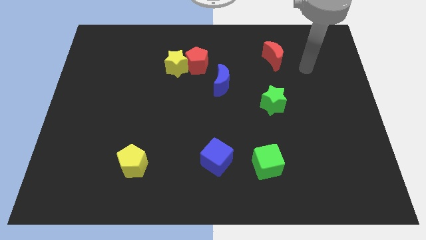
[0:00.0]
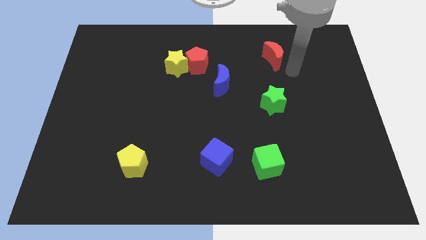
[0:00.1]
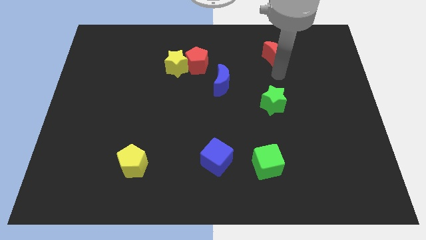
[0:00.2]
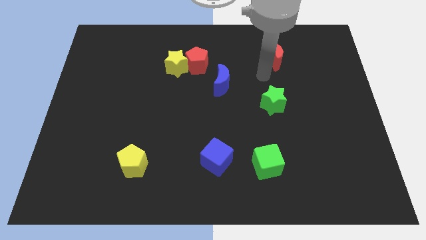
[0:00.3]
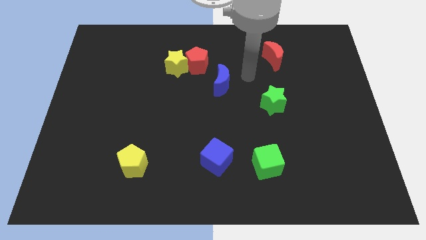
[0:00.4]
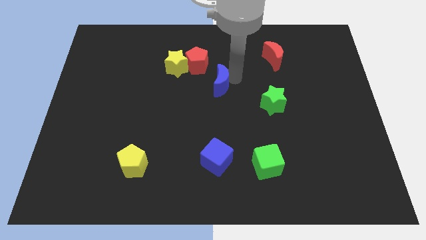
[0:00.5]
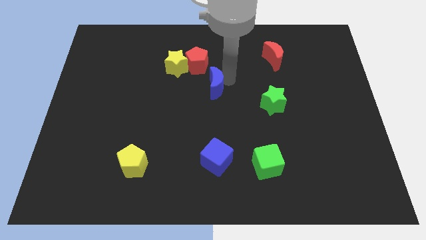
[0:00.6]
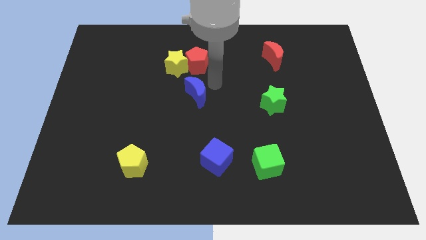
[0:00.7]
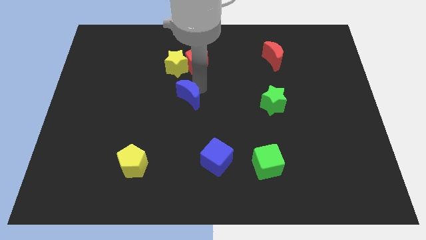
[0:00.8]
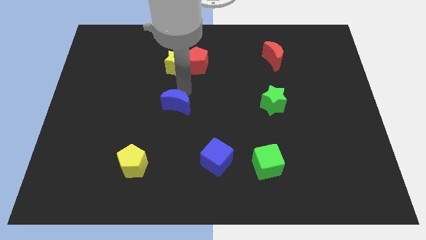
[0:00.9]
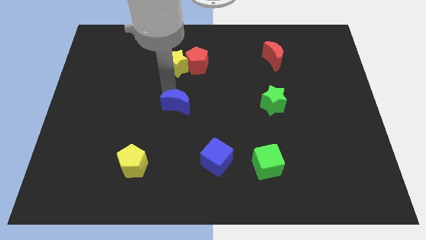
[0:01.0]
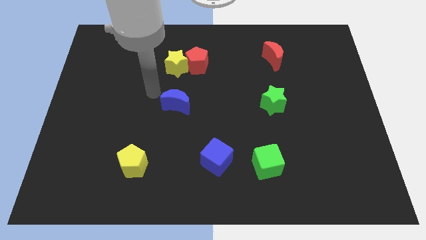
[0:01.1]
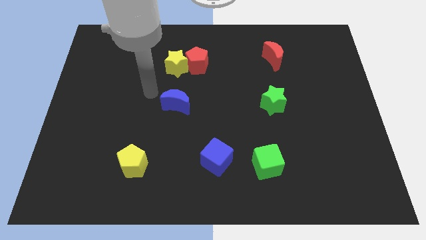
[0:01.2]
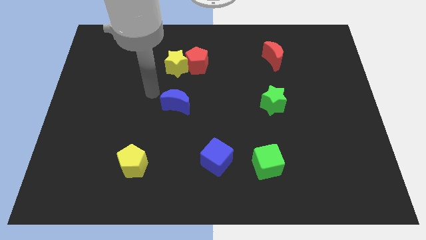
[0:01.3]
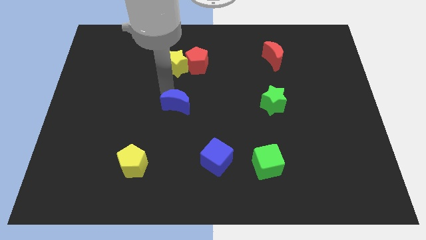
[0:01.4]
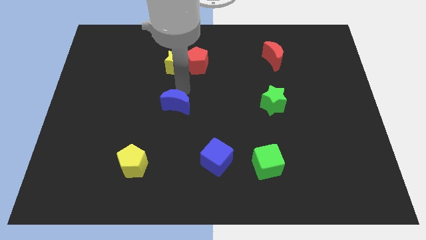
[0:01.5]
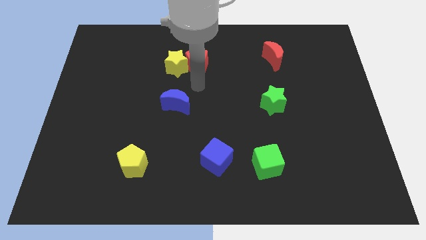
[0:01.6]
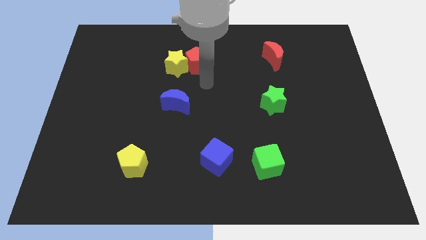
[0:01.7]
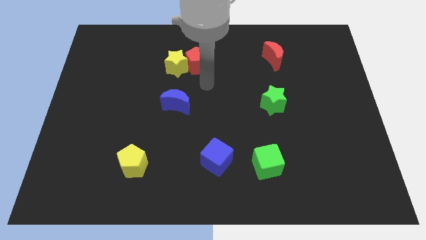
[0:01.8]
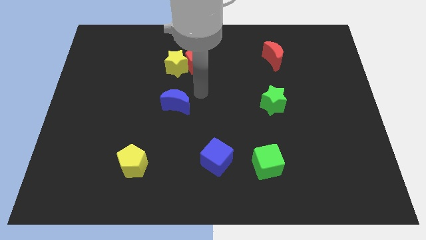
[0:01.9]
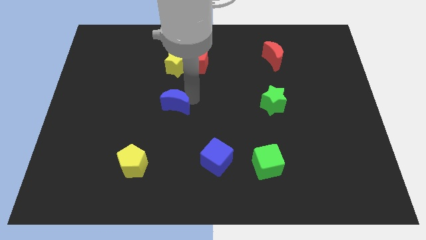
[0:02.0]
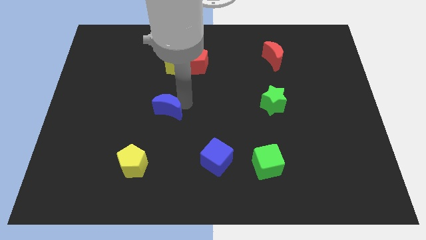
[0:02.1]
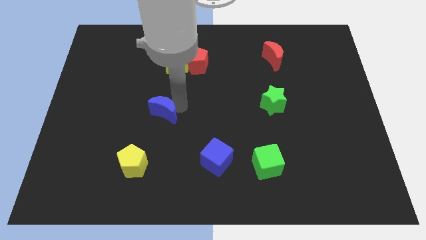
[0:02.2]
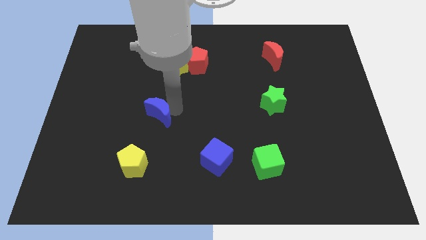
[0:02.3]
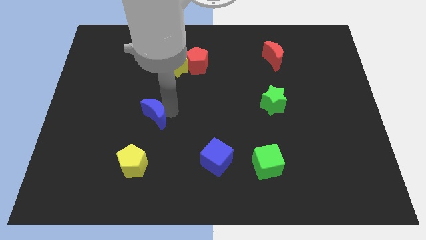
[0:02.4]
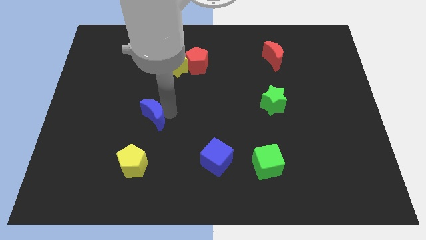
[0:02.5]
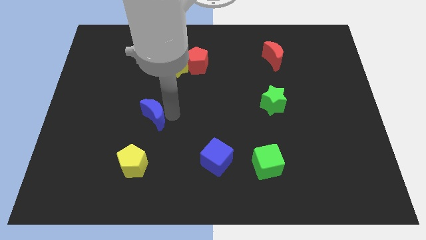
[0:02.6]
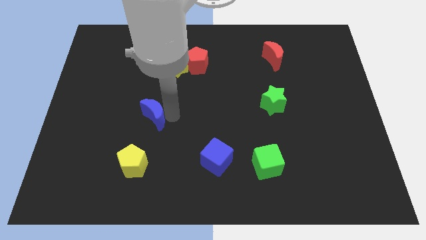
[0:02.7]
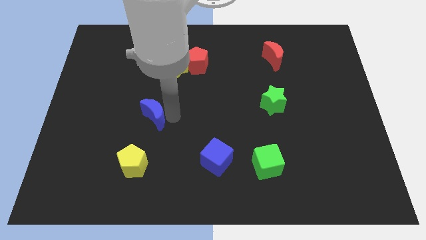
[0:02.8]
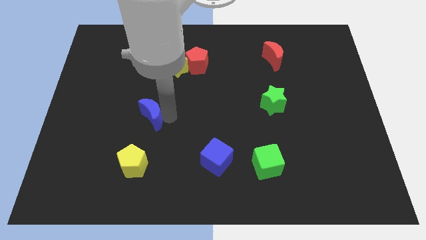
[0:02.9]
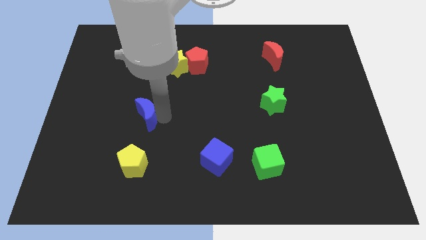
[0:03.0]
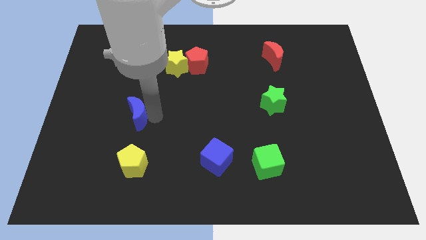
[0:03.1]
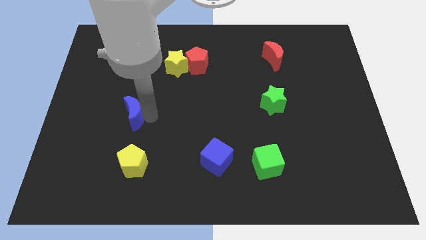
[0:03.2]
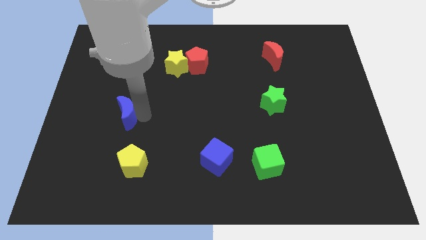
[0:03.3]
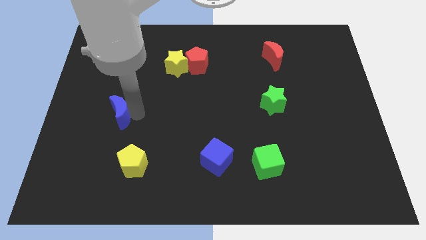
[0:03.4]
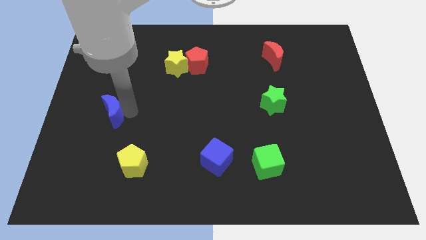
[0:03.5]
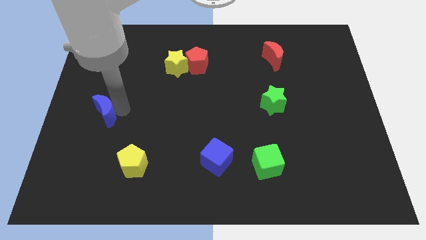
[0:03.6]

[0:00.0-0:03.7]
move the blue crescent diagonally on the top left side of the yellow pentagon

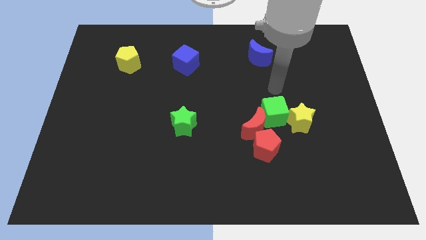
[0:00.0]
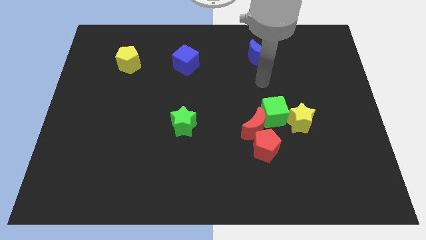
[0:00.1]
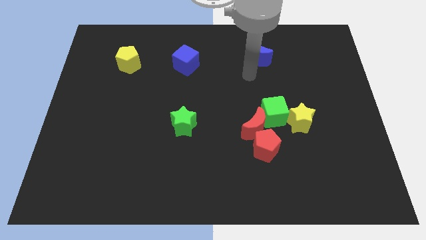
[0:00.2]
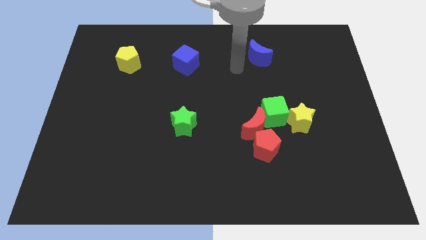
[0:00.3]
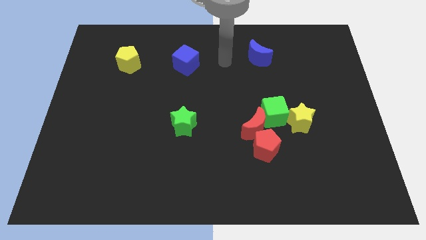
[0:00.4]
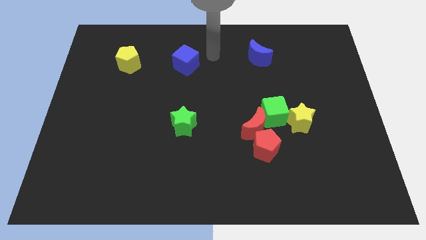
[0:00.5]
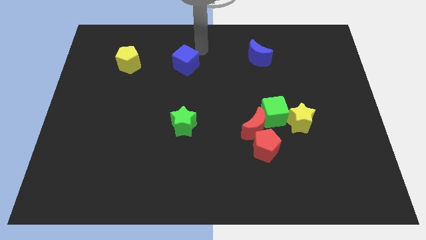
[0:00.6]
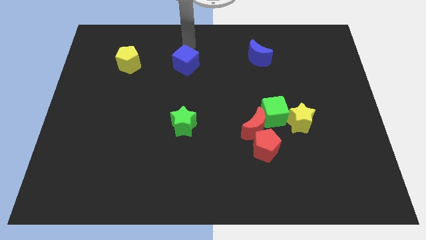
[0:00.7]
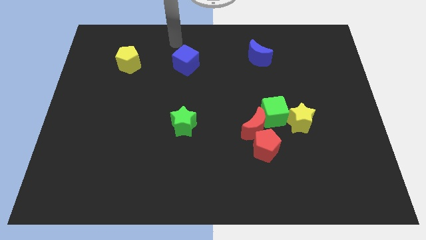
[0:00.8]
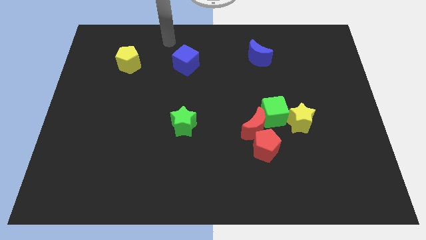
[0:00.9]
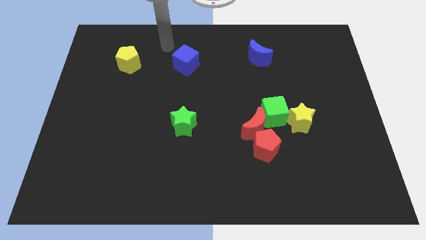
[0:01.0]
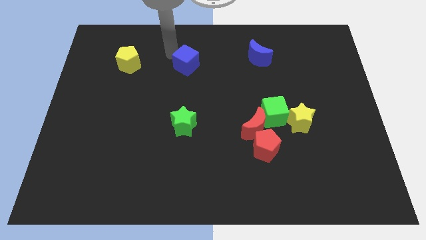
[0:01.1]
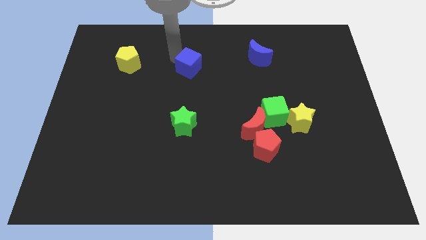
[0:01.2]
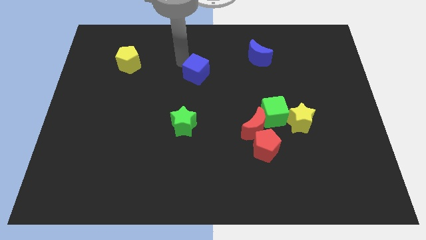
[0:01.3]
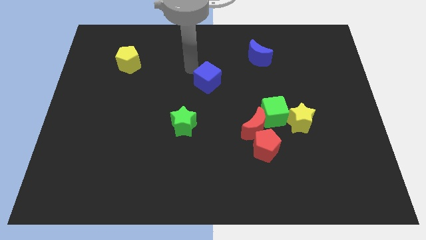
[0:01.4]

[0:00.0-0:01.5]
push the blue cube slightly to the bottom

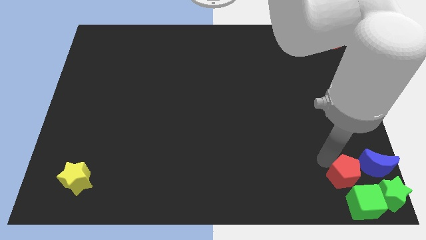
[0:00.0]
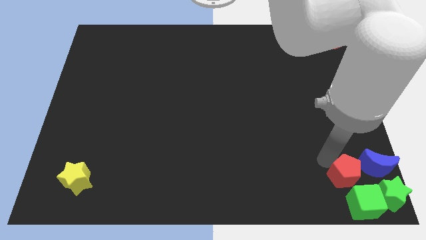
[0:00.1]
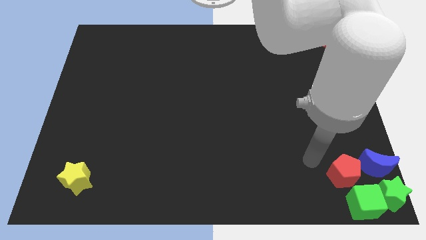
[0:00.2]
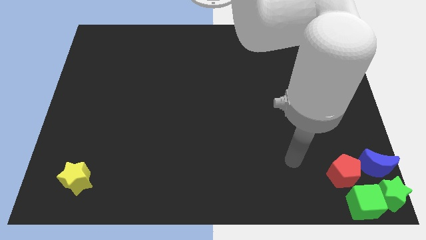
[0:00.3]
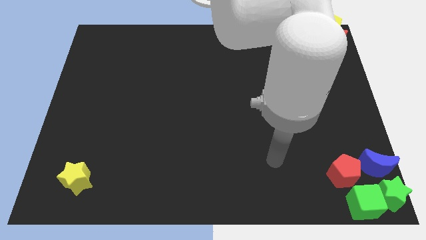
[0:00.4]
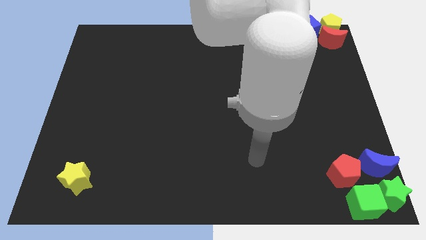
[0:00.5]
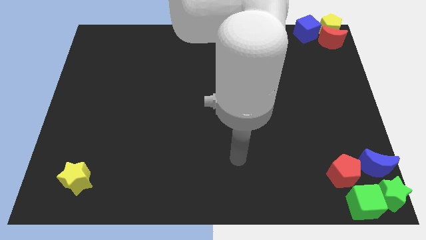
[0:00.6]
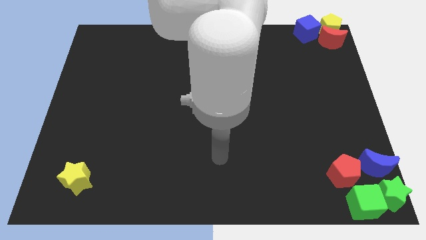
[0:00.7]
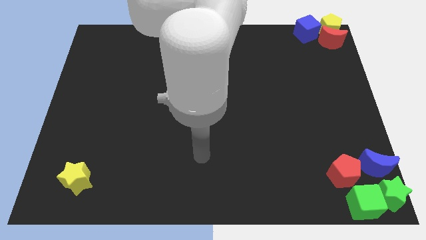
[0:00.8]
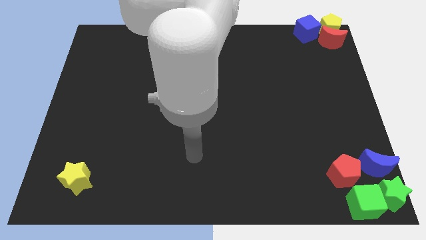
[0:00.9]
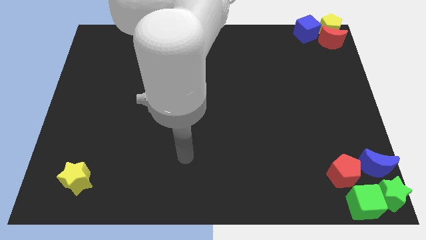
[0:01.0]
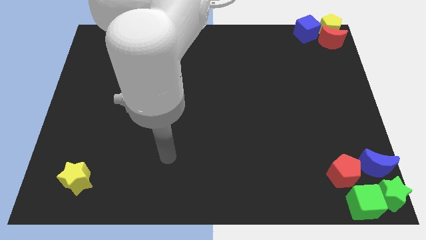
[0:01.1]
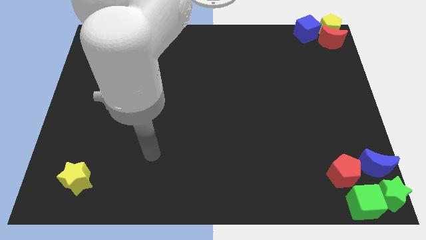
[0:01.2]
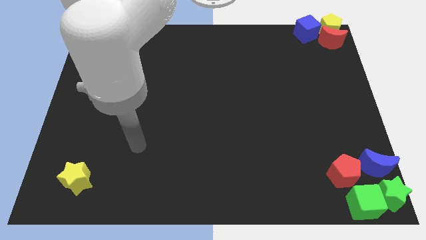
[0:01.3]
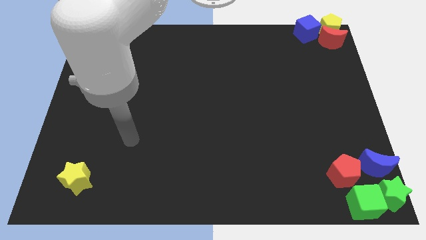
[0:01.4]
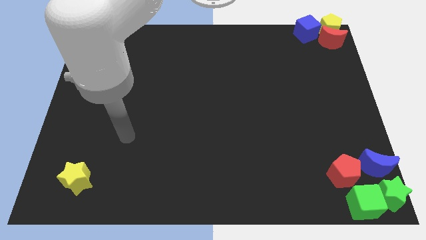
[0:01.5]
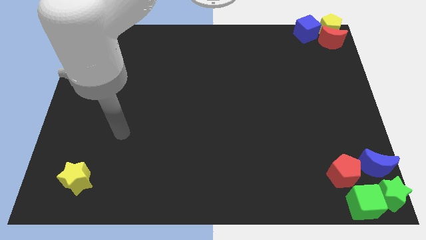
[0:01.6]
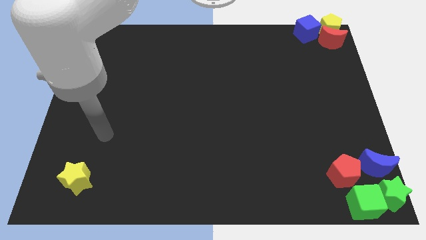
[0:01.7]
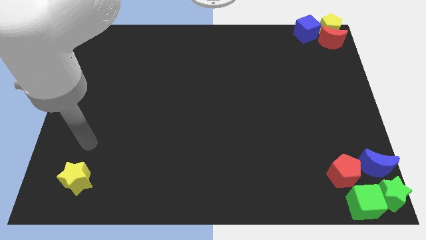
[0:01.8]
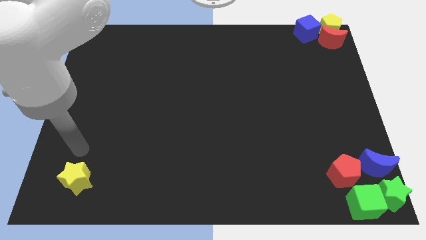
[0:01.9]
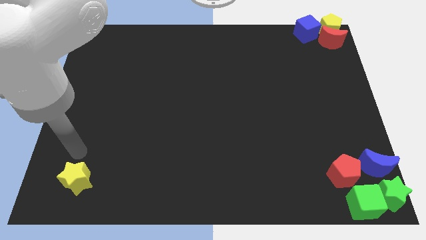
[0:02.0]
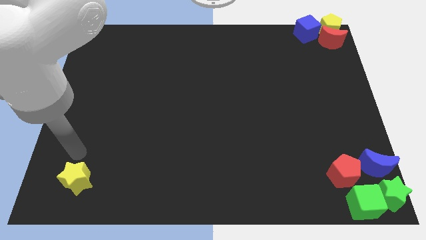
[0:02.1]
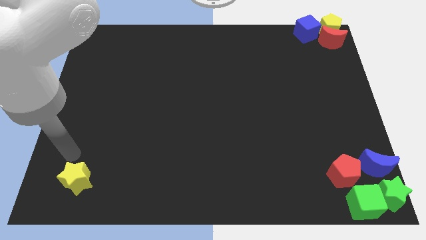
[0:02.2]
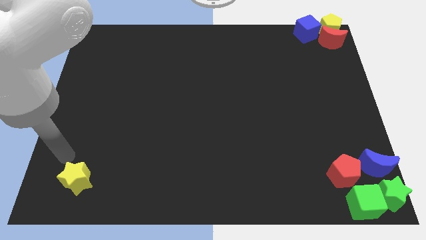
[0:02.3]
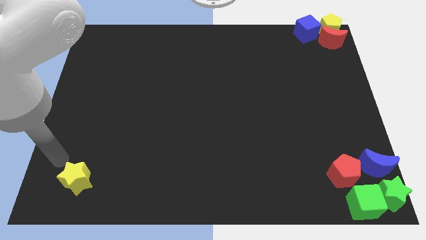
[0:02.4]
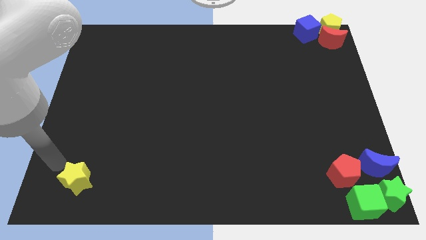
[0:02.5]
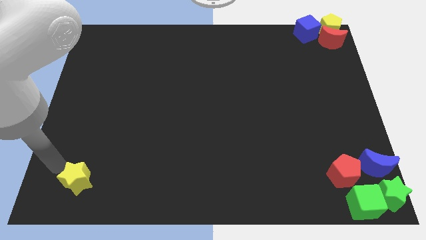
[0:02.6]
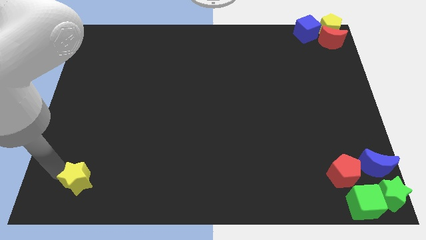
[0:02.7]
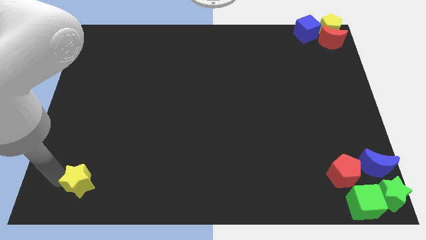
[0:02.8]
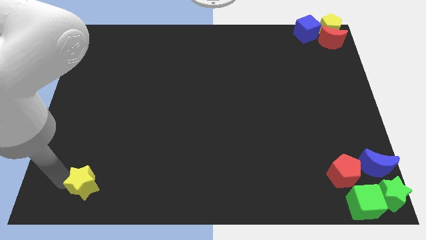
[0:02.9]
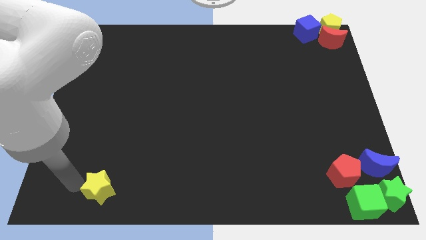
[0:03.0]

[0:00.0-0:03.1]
touch the left side of the yellow star

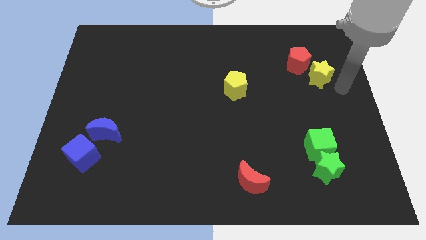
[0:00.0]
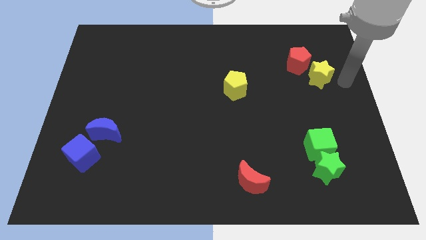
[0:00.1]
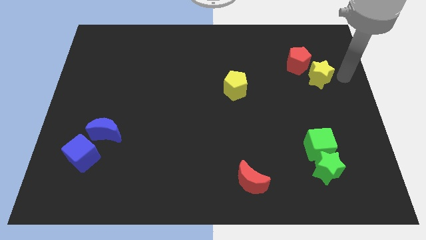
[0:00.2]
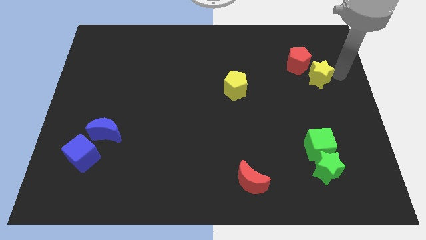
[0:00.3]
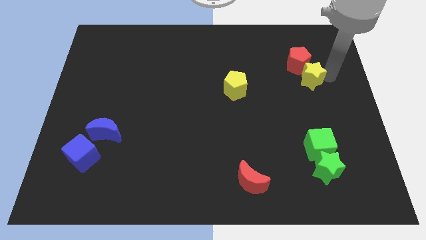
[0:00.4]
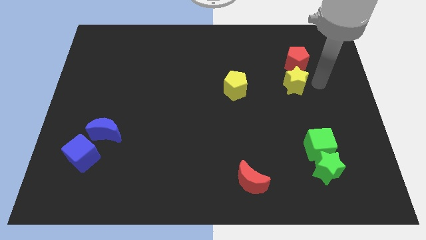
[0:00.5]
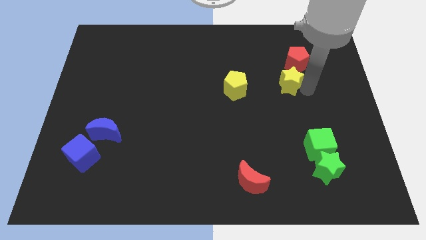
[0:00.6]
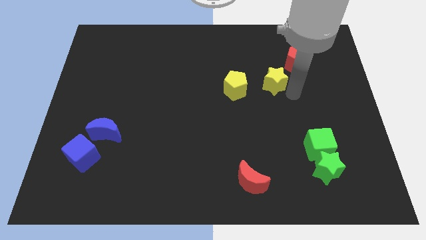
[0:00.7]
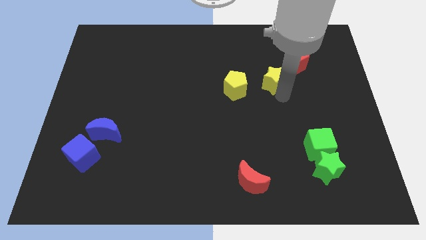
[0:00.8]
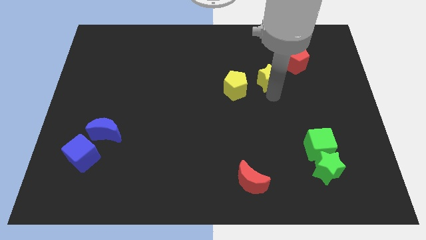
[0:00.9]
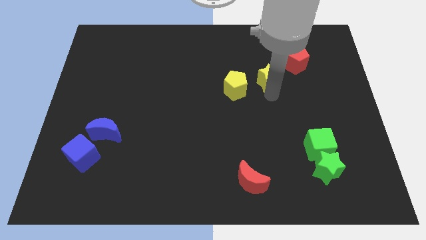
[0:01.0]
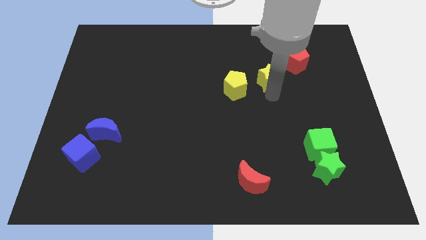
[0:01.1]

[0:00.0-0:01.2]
place yellow star to the right of yellow pentagon
